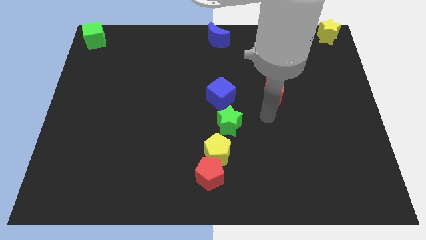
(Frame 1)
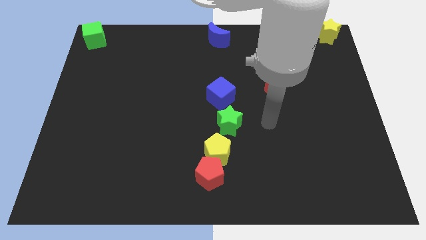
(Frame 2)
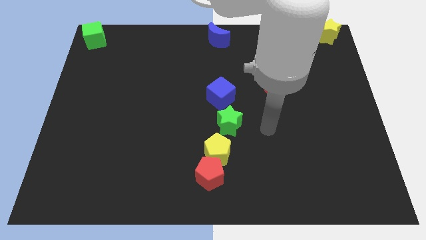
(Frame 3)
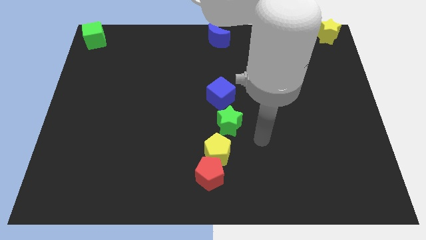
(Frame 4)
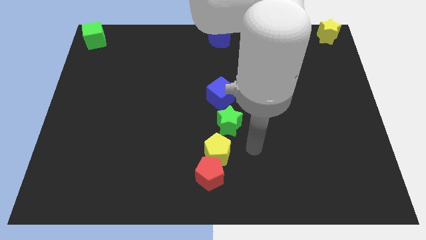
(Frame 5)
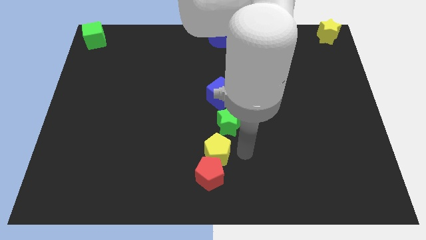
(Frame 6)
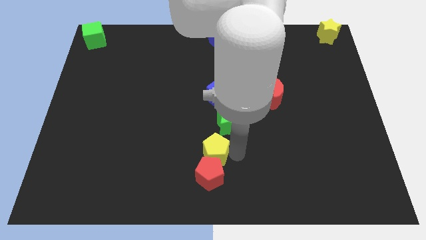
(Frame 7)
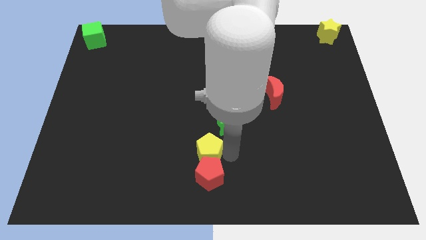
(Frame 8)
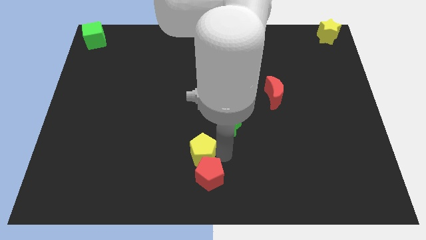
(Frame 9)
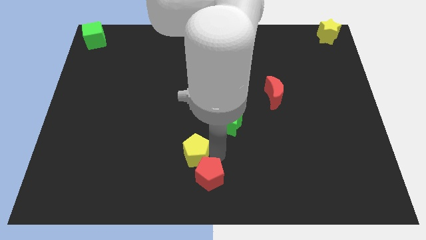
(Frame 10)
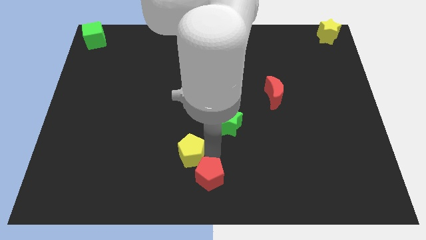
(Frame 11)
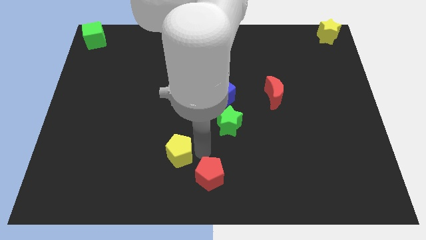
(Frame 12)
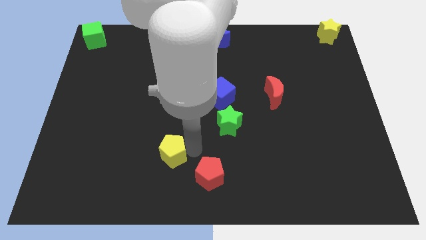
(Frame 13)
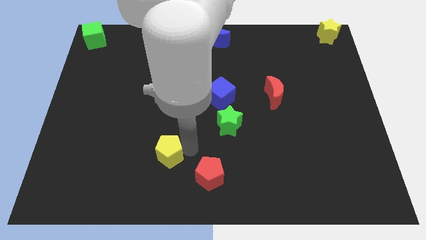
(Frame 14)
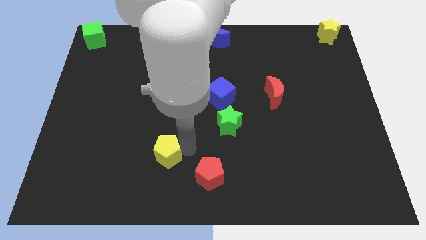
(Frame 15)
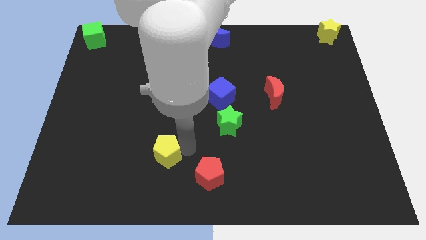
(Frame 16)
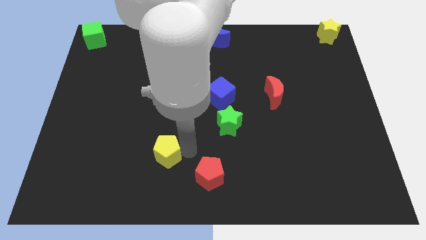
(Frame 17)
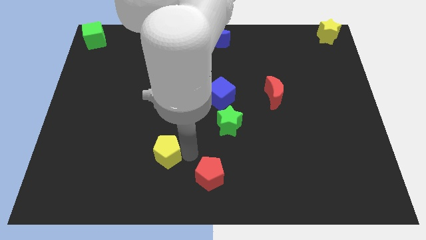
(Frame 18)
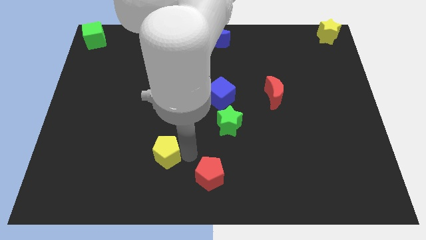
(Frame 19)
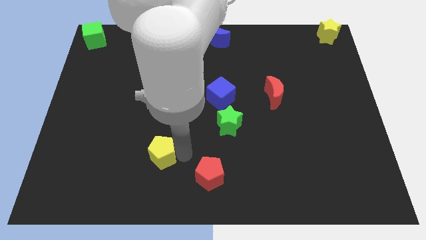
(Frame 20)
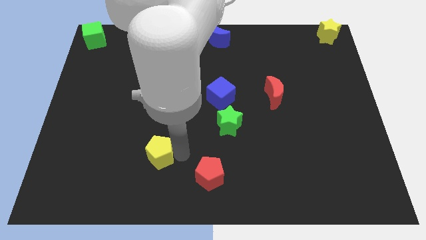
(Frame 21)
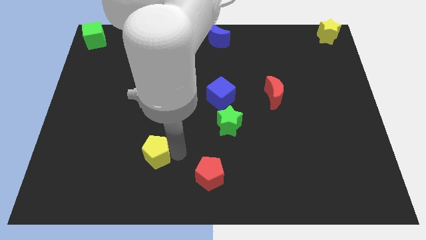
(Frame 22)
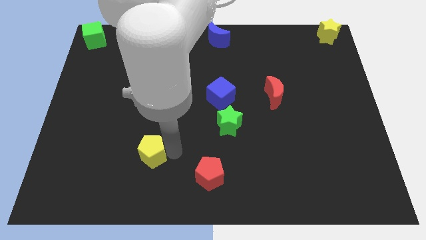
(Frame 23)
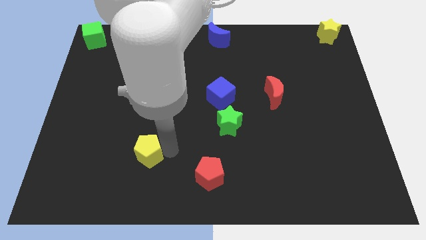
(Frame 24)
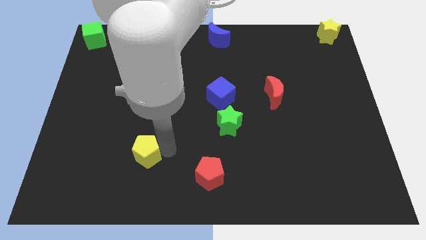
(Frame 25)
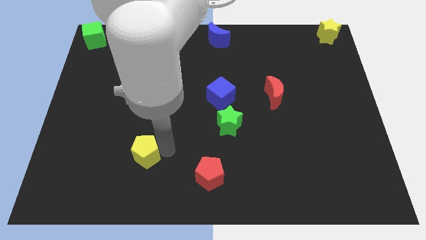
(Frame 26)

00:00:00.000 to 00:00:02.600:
separate the yellow pentagon towards the lrft side

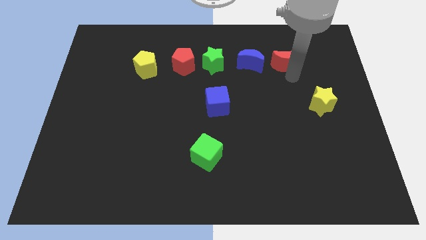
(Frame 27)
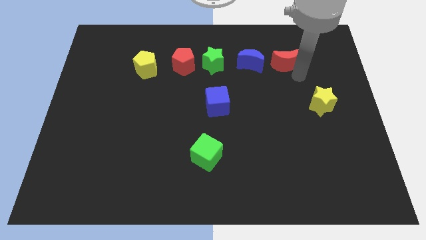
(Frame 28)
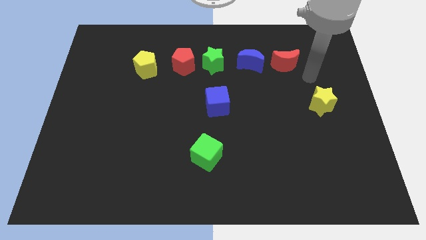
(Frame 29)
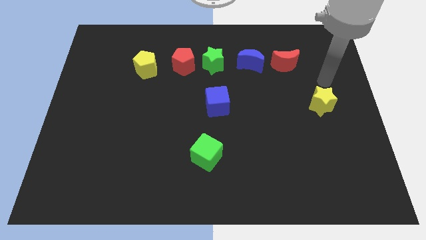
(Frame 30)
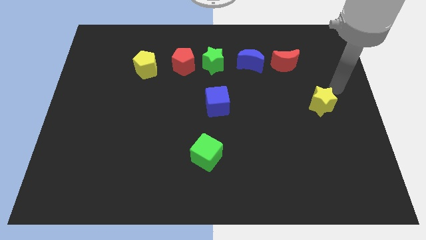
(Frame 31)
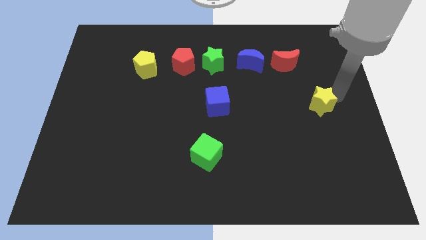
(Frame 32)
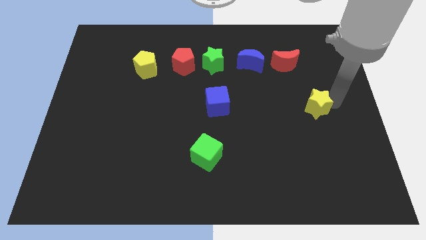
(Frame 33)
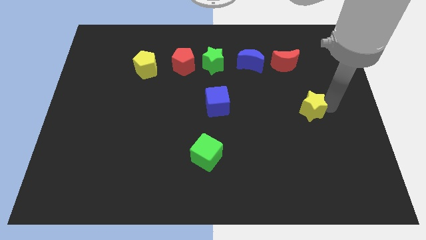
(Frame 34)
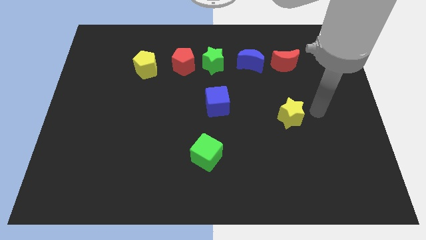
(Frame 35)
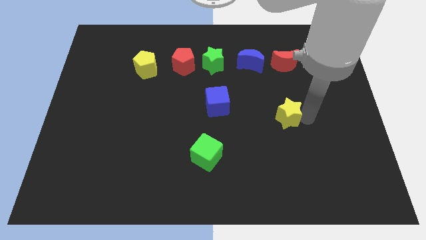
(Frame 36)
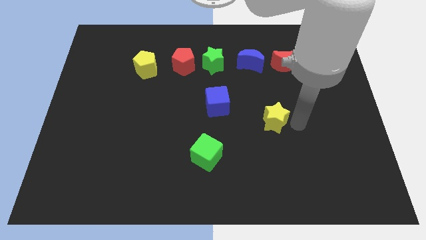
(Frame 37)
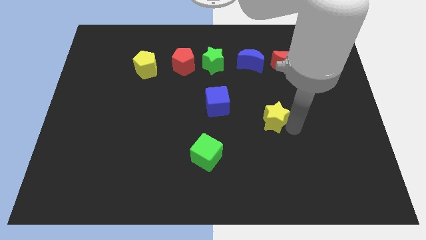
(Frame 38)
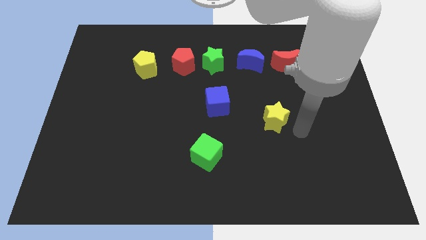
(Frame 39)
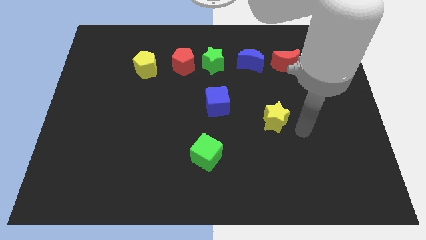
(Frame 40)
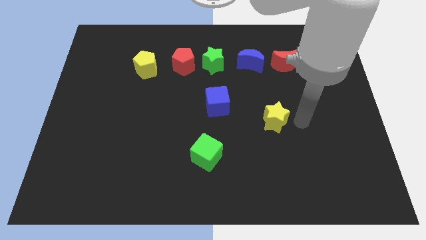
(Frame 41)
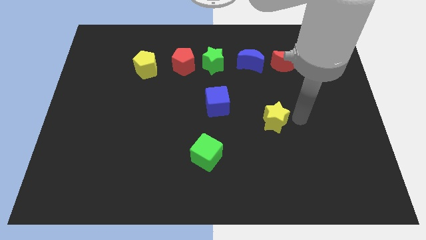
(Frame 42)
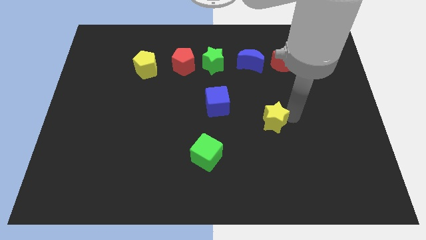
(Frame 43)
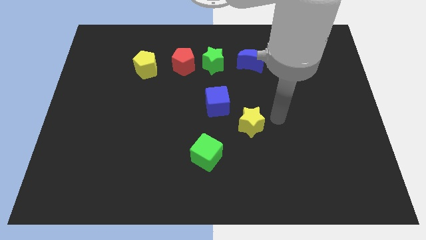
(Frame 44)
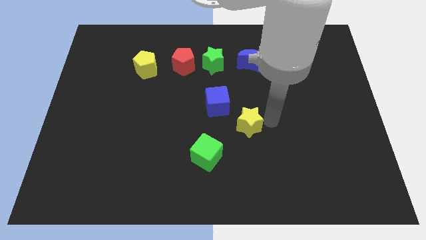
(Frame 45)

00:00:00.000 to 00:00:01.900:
move the yellow star towards the blue and green cube

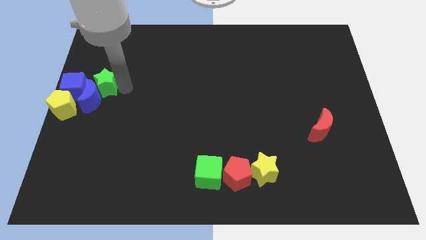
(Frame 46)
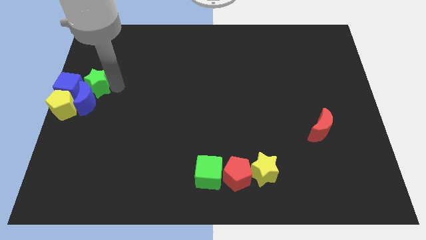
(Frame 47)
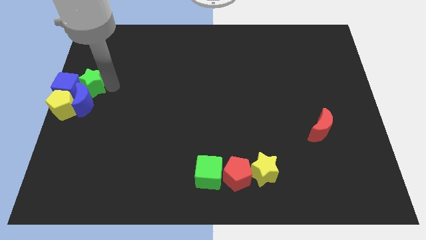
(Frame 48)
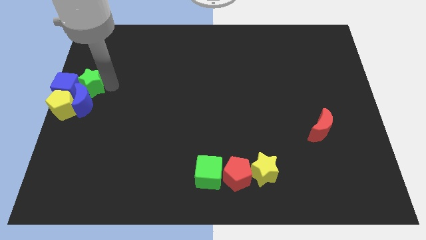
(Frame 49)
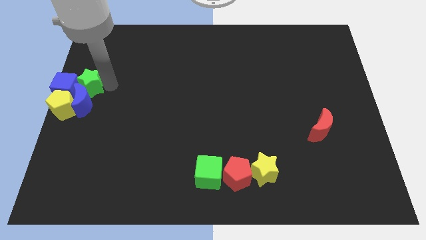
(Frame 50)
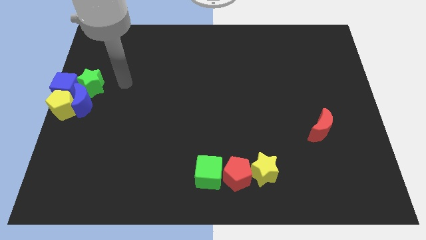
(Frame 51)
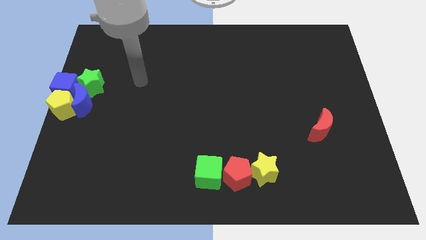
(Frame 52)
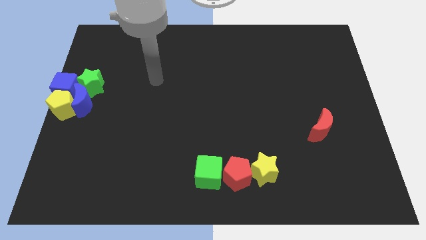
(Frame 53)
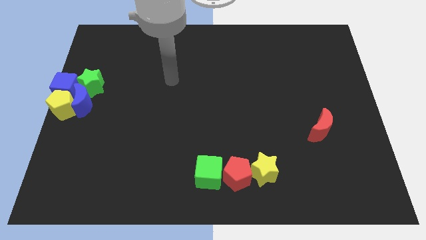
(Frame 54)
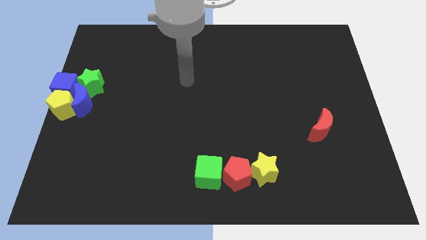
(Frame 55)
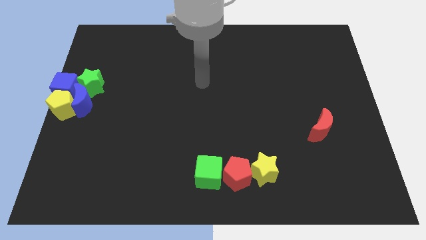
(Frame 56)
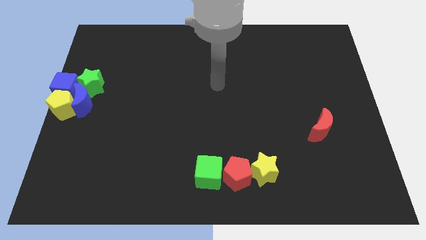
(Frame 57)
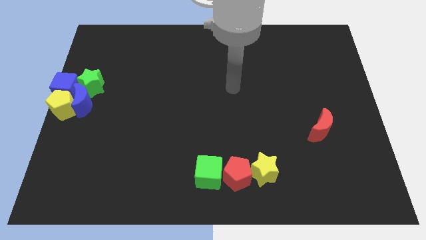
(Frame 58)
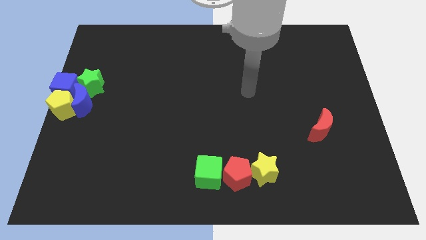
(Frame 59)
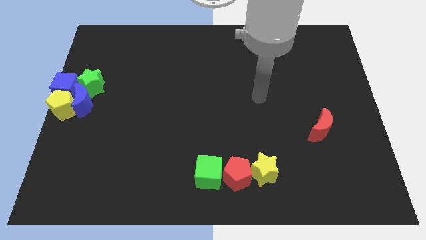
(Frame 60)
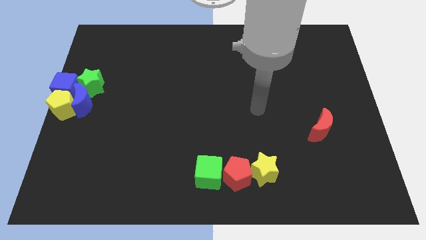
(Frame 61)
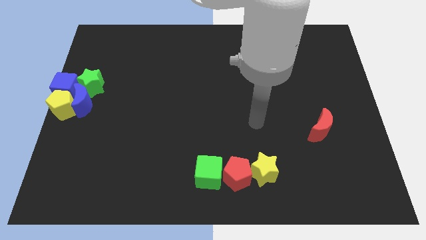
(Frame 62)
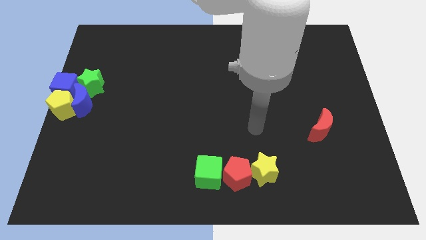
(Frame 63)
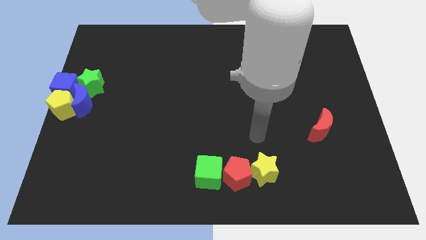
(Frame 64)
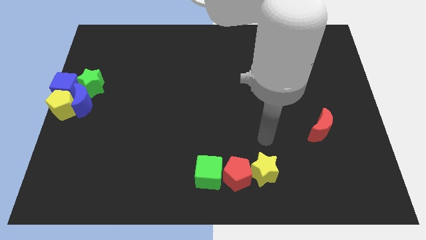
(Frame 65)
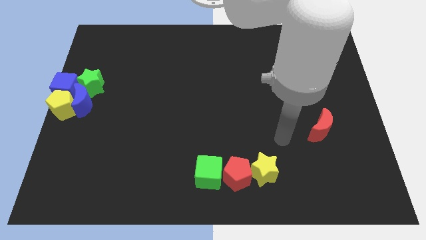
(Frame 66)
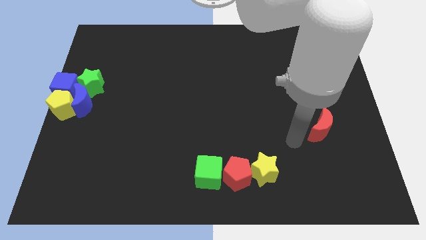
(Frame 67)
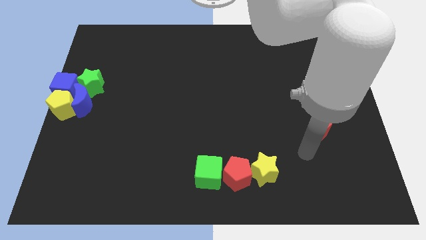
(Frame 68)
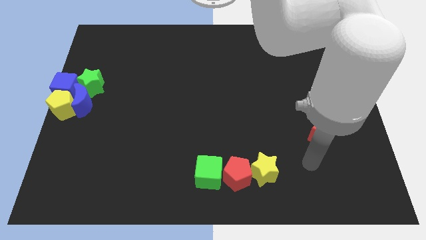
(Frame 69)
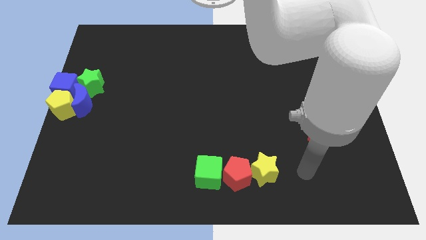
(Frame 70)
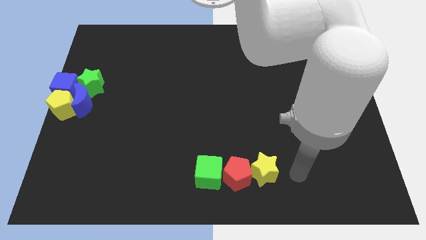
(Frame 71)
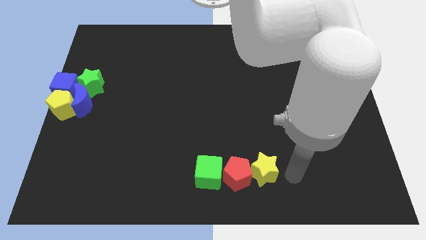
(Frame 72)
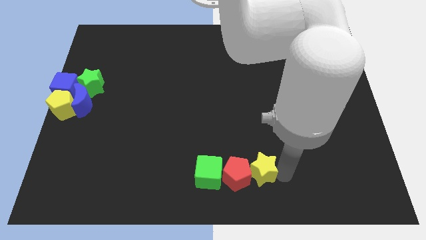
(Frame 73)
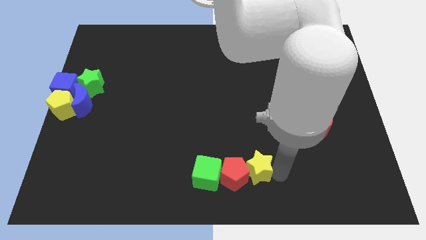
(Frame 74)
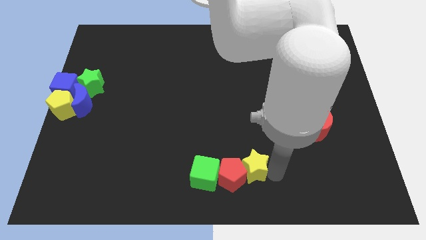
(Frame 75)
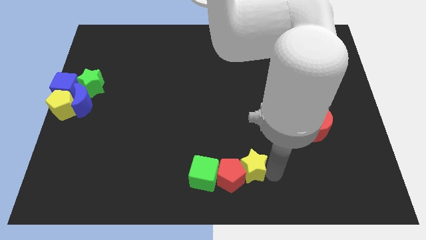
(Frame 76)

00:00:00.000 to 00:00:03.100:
push yellow star into red pentagon

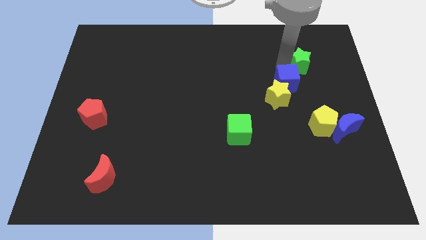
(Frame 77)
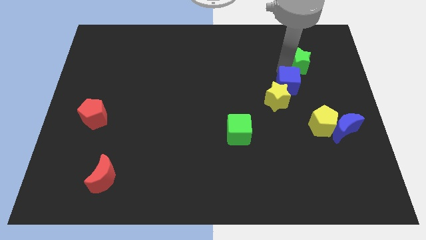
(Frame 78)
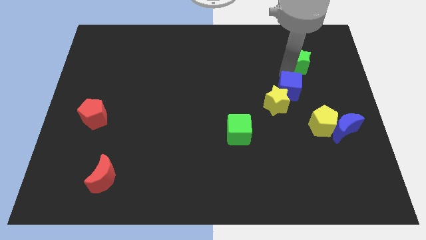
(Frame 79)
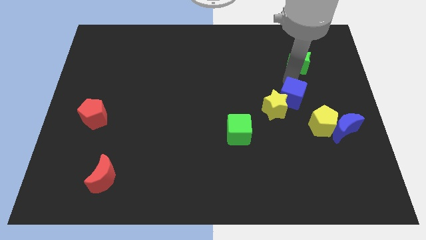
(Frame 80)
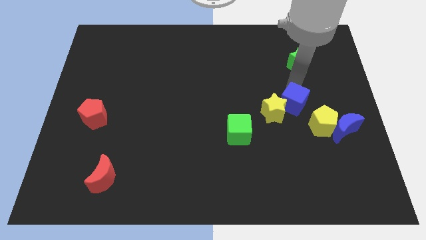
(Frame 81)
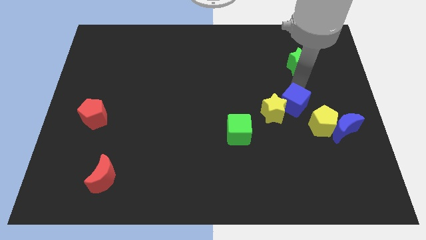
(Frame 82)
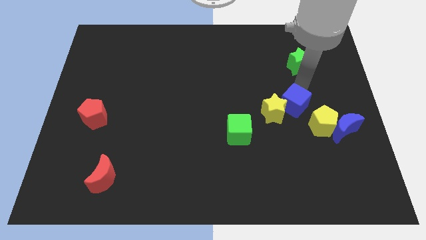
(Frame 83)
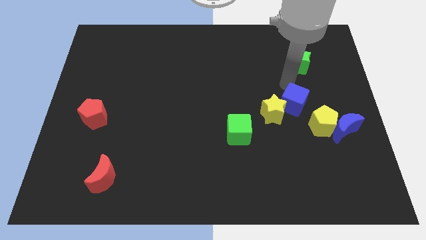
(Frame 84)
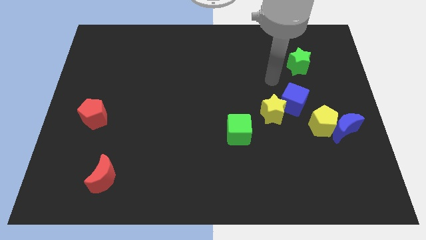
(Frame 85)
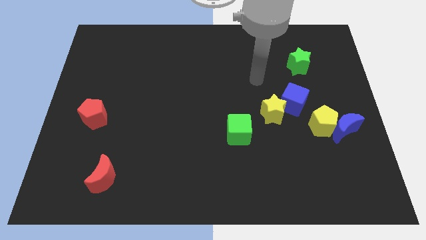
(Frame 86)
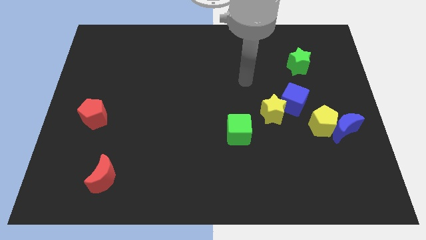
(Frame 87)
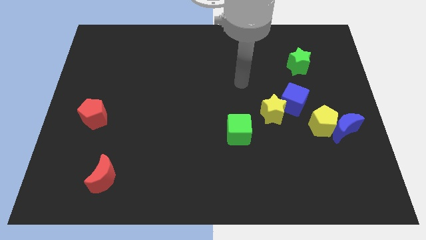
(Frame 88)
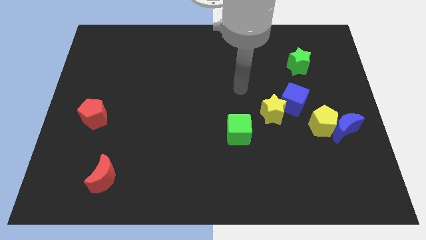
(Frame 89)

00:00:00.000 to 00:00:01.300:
place the blue cube to the top right of yellow star
